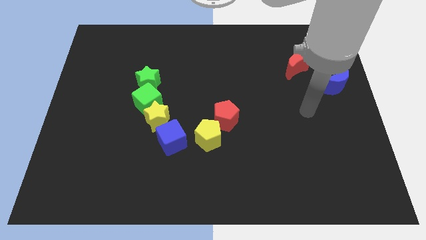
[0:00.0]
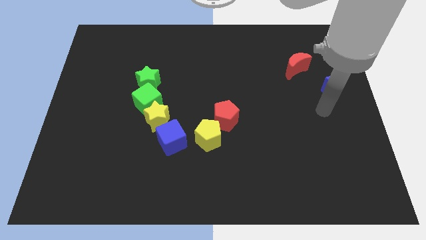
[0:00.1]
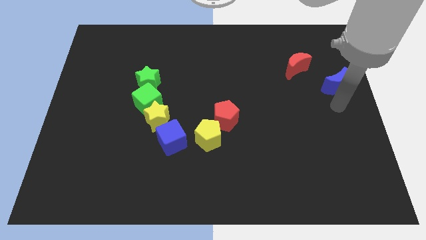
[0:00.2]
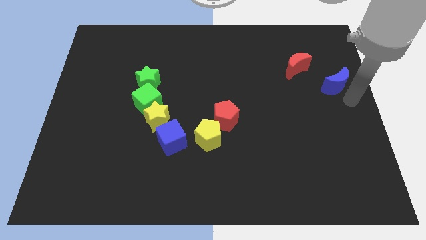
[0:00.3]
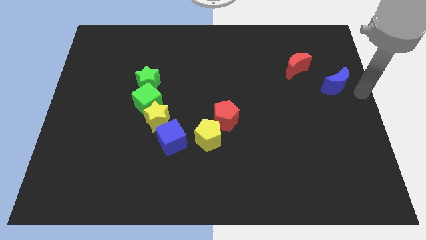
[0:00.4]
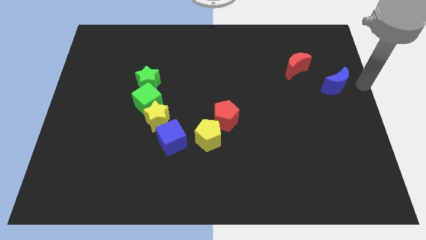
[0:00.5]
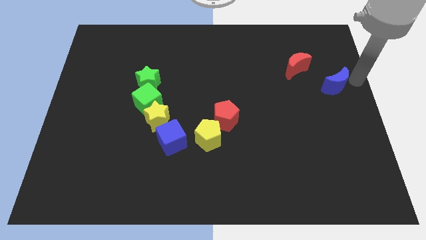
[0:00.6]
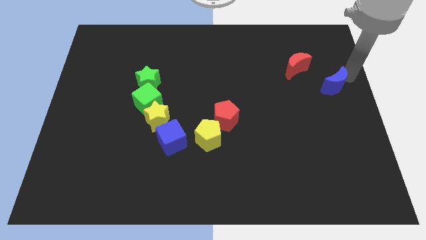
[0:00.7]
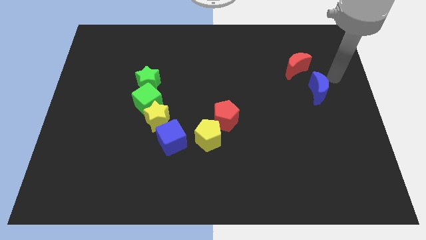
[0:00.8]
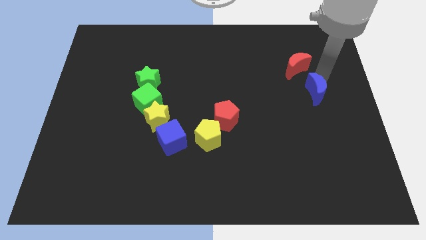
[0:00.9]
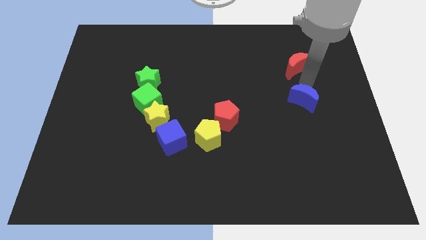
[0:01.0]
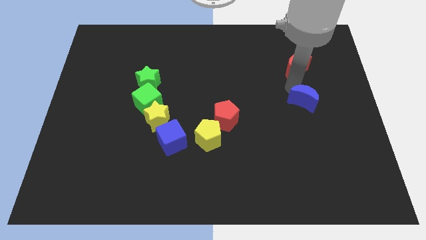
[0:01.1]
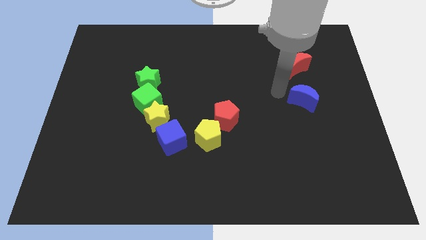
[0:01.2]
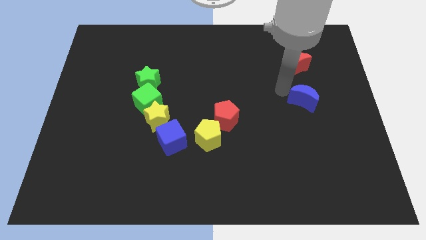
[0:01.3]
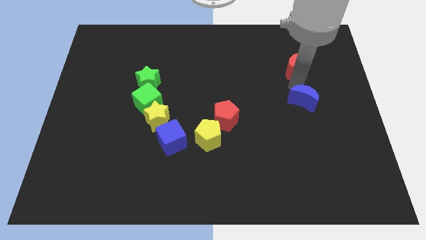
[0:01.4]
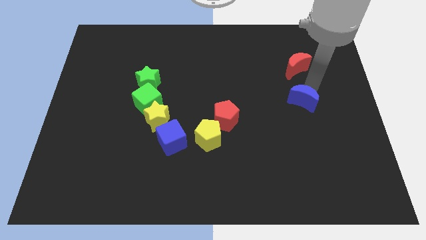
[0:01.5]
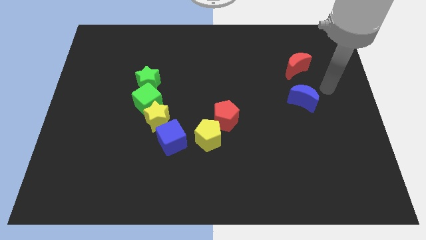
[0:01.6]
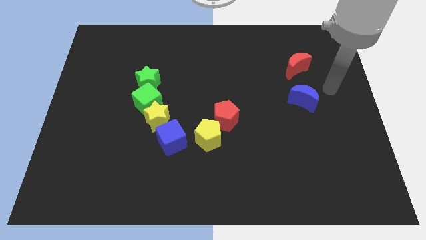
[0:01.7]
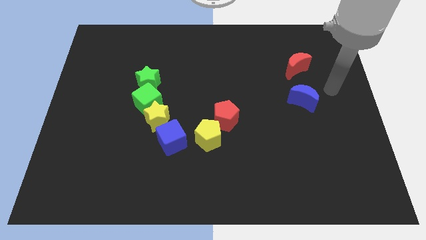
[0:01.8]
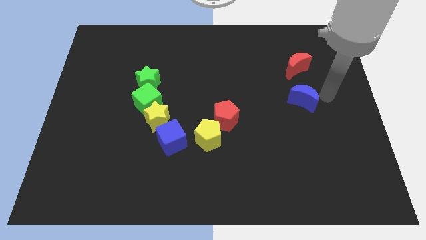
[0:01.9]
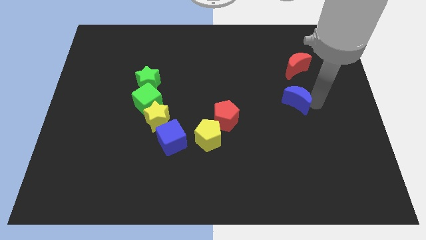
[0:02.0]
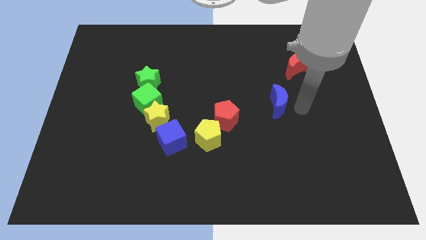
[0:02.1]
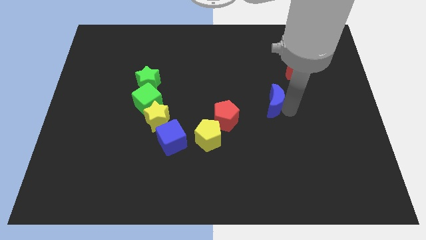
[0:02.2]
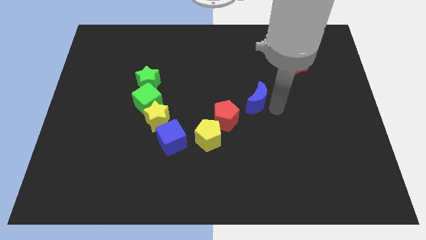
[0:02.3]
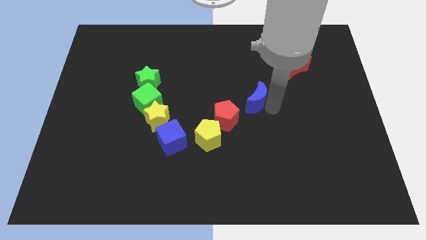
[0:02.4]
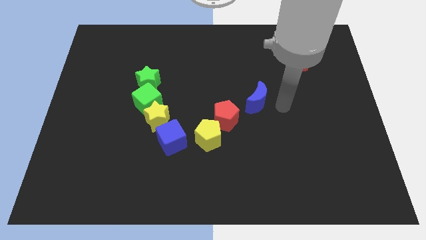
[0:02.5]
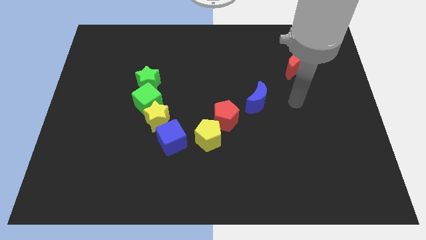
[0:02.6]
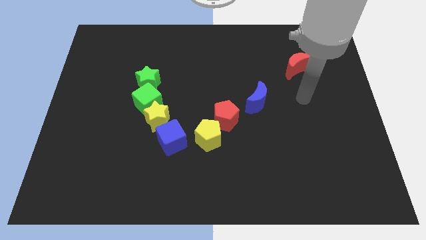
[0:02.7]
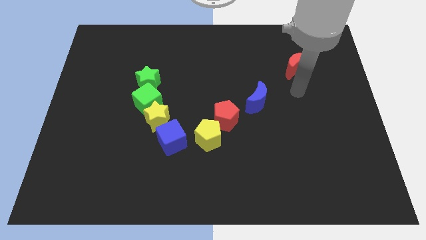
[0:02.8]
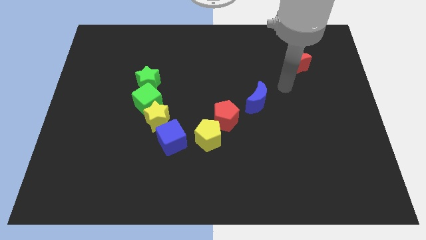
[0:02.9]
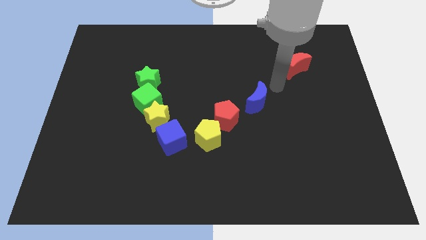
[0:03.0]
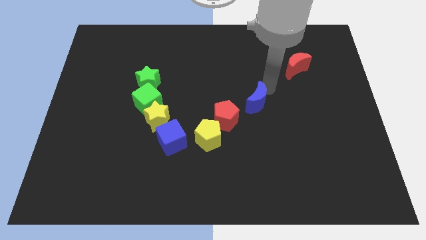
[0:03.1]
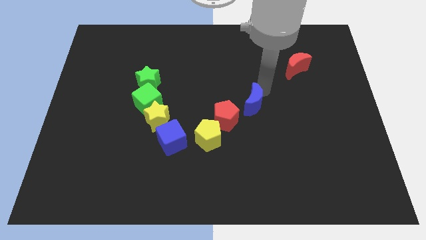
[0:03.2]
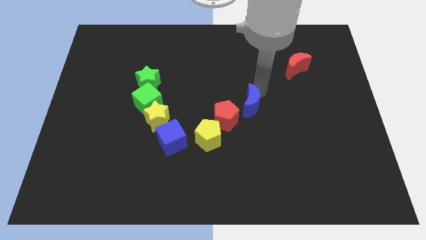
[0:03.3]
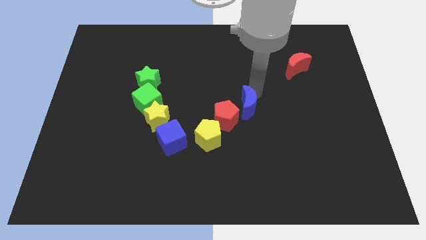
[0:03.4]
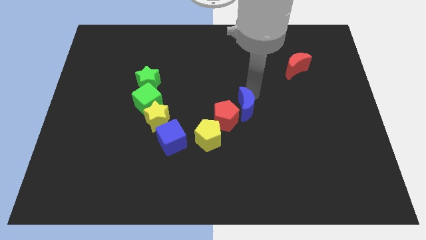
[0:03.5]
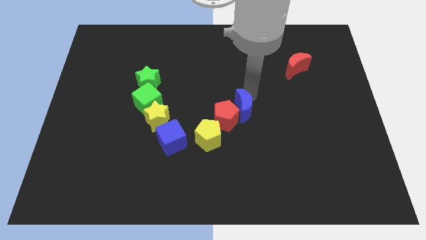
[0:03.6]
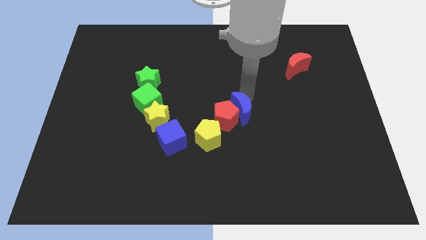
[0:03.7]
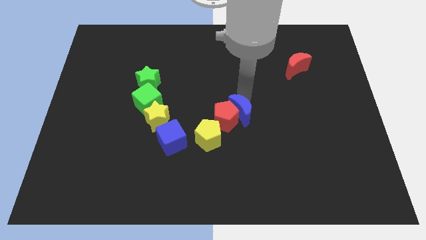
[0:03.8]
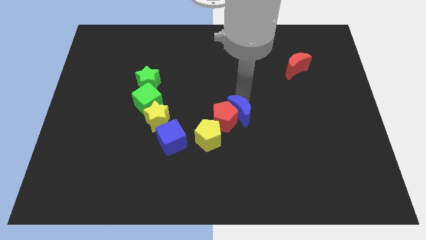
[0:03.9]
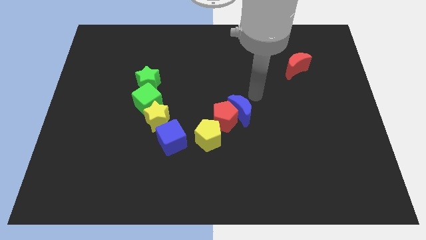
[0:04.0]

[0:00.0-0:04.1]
push the blue crescent towards the red pentagon

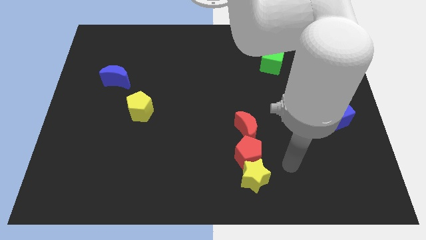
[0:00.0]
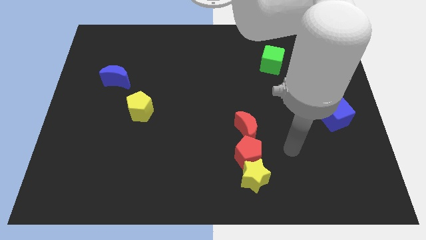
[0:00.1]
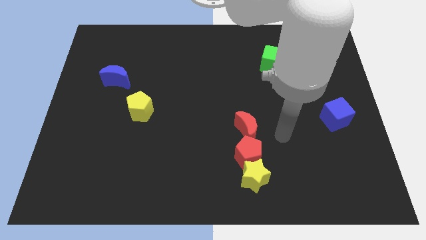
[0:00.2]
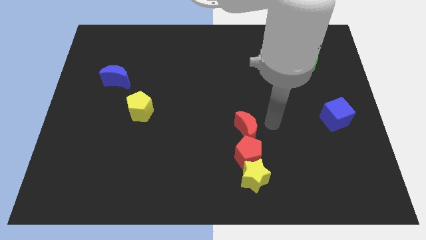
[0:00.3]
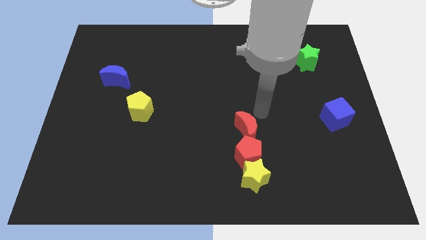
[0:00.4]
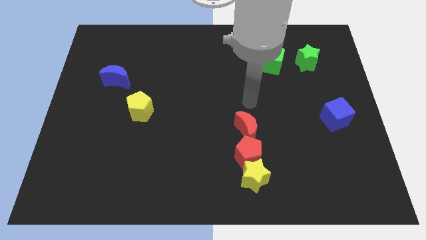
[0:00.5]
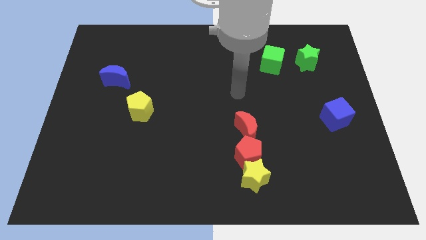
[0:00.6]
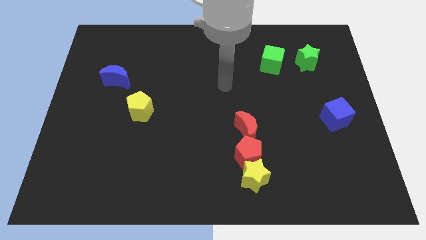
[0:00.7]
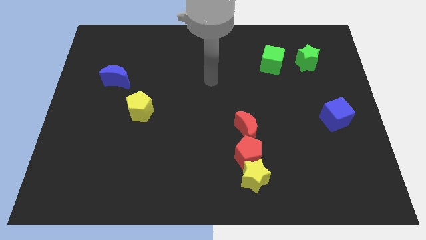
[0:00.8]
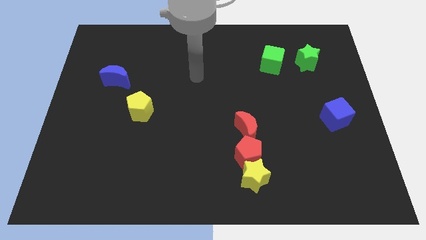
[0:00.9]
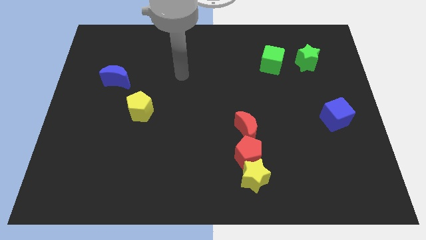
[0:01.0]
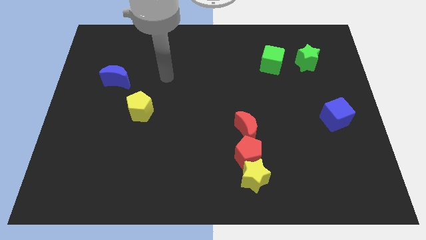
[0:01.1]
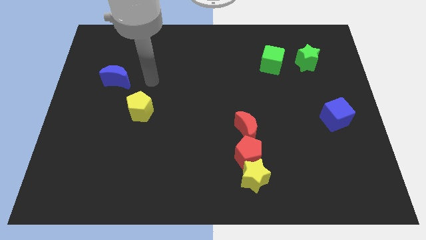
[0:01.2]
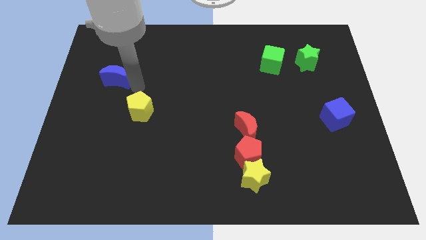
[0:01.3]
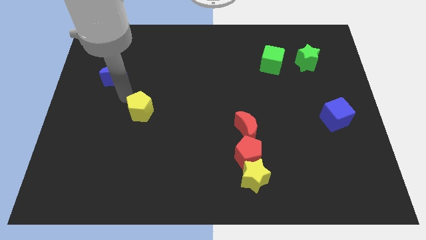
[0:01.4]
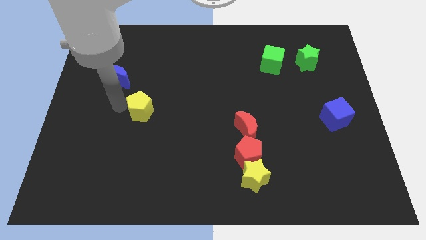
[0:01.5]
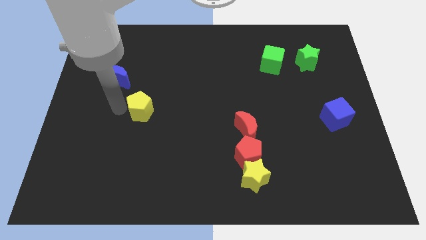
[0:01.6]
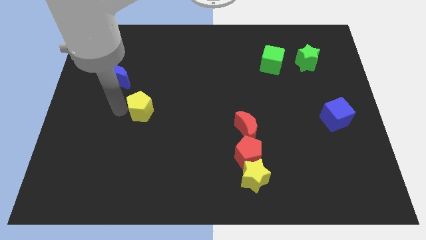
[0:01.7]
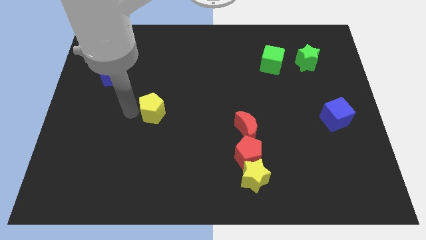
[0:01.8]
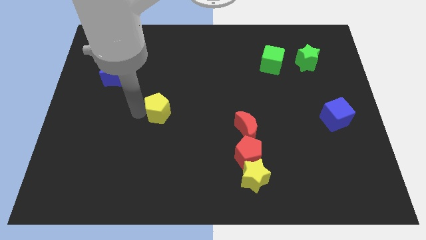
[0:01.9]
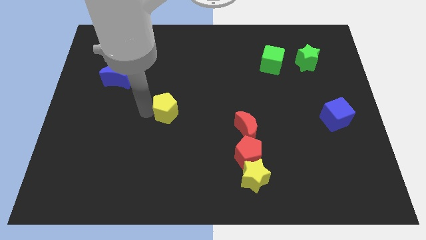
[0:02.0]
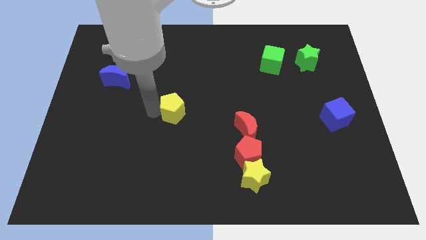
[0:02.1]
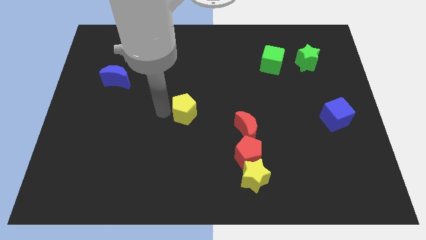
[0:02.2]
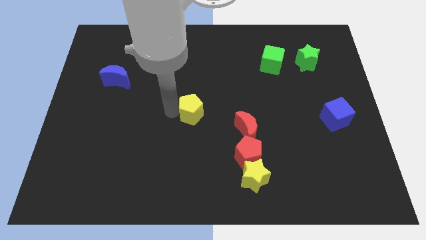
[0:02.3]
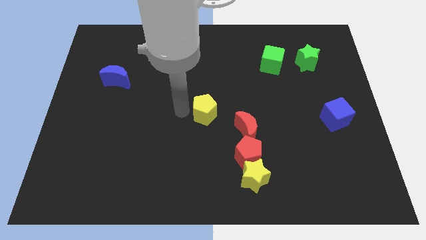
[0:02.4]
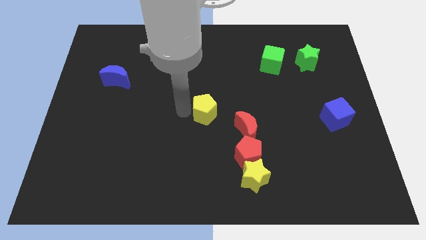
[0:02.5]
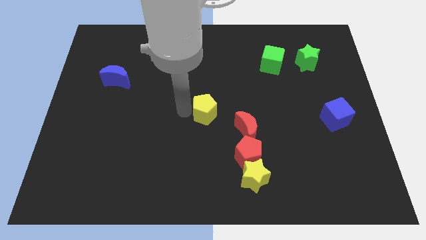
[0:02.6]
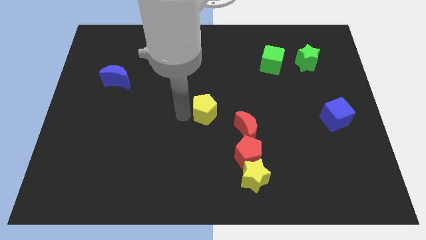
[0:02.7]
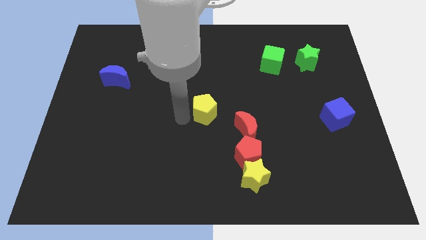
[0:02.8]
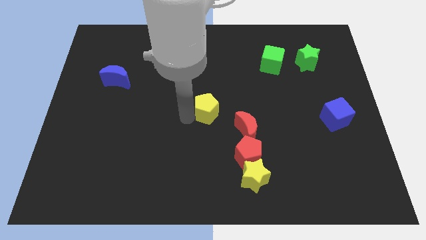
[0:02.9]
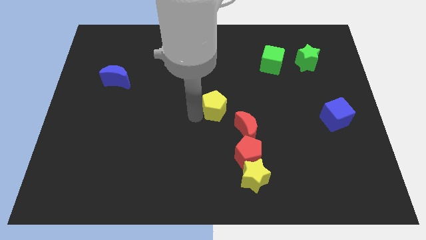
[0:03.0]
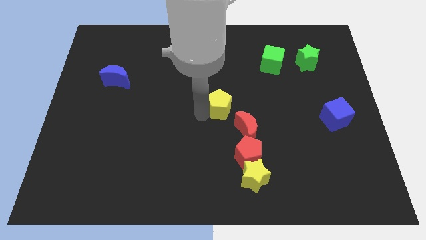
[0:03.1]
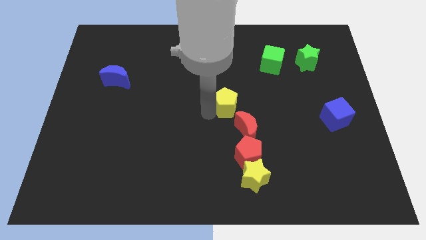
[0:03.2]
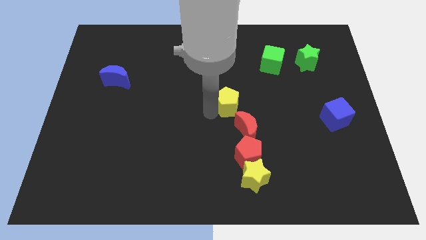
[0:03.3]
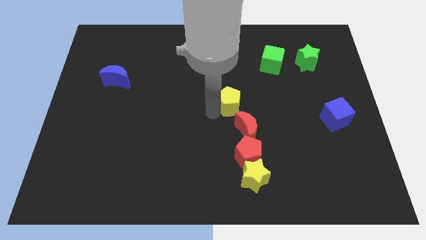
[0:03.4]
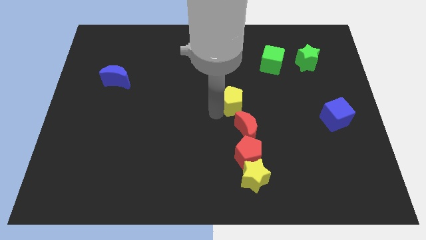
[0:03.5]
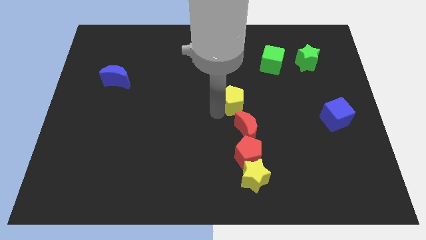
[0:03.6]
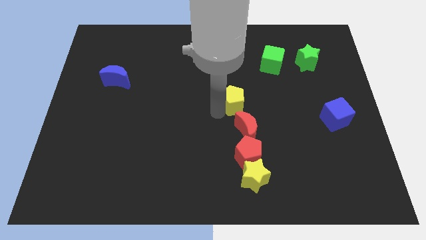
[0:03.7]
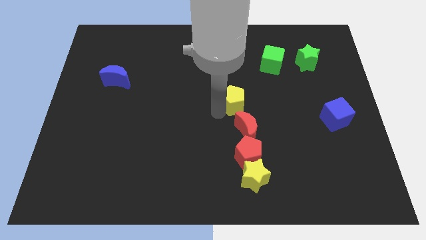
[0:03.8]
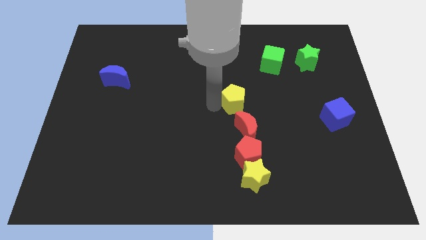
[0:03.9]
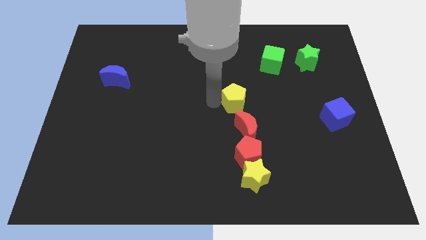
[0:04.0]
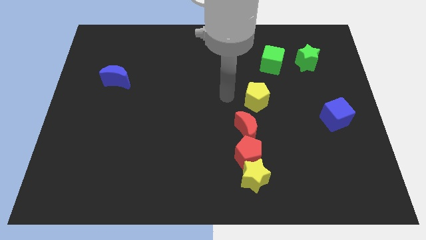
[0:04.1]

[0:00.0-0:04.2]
push the yellow pentagon to the top side of the red moon

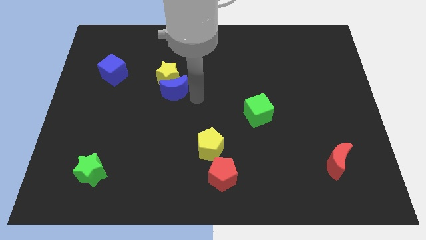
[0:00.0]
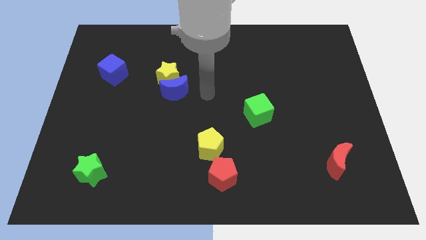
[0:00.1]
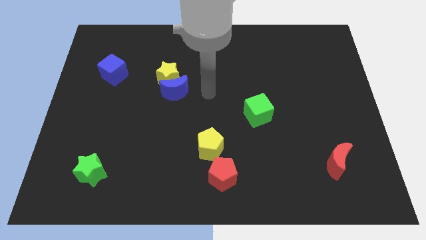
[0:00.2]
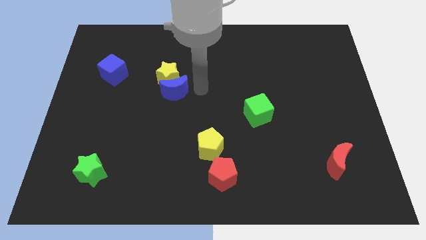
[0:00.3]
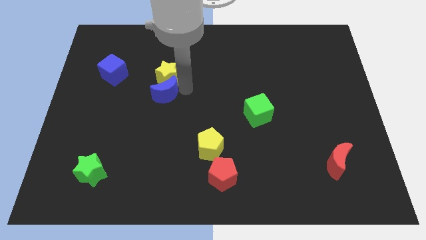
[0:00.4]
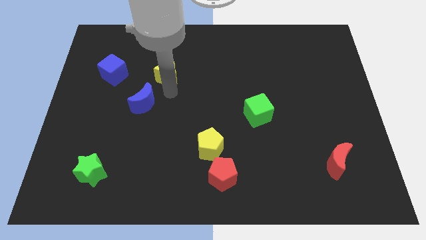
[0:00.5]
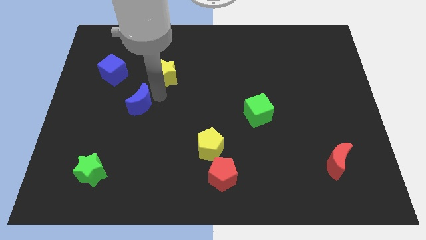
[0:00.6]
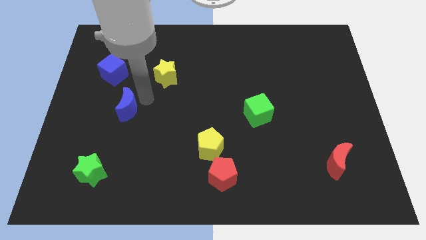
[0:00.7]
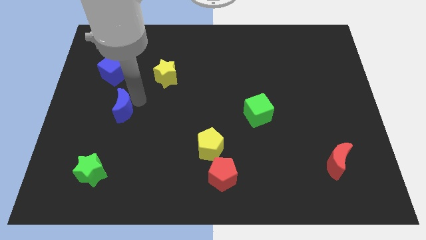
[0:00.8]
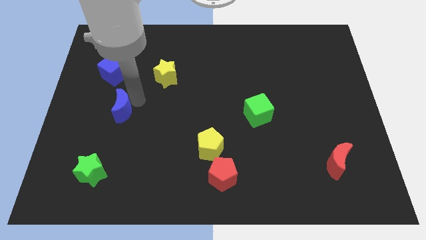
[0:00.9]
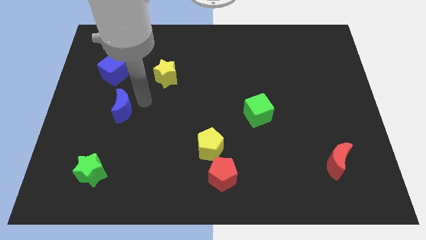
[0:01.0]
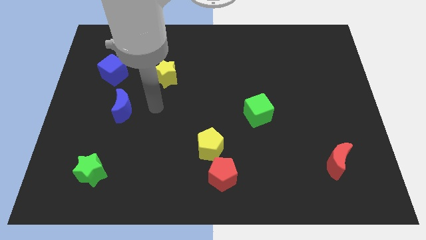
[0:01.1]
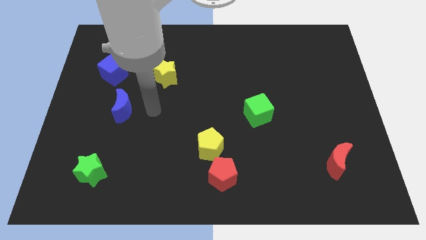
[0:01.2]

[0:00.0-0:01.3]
move the blue crescent to the bottom of the blue cube
